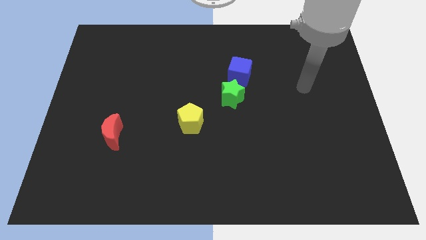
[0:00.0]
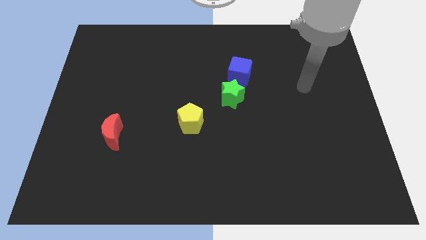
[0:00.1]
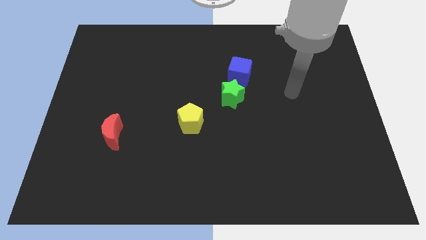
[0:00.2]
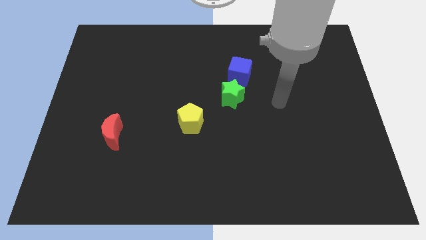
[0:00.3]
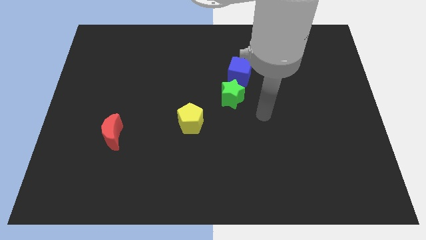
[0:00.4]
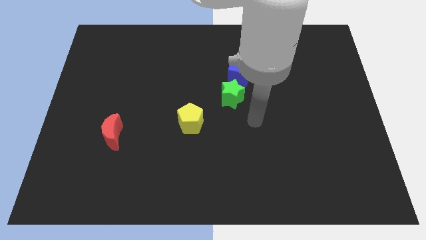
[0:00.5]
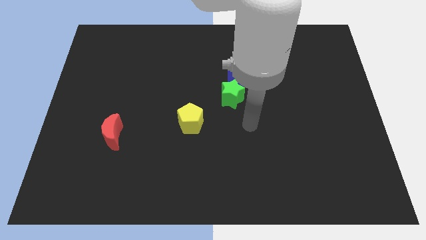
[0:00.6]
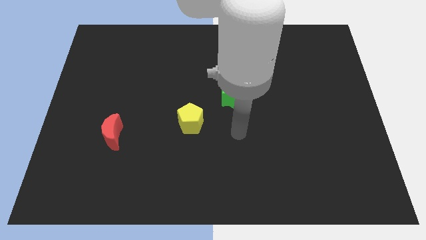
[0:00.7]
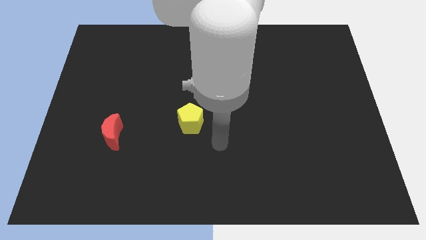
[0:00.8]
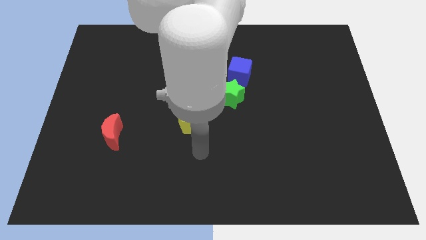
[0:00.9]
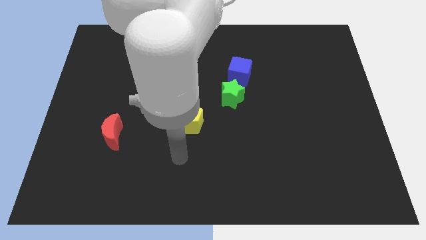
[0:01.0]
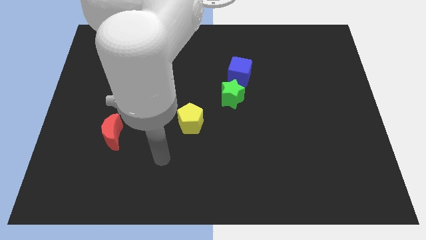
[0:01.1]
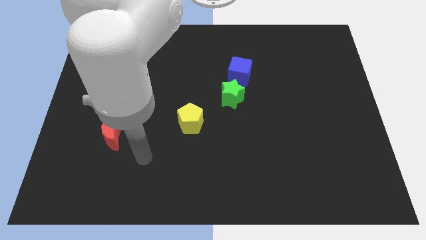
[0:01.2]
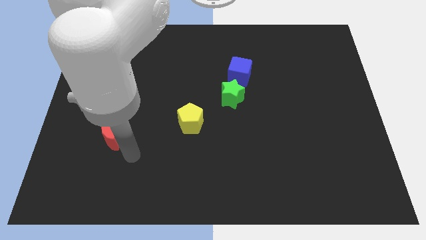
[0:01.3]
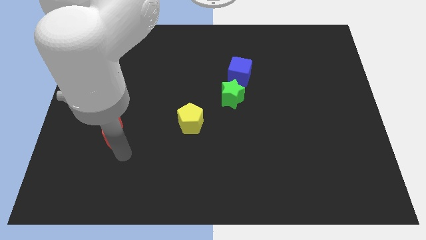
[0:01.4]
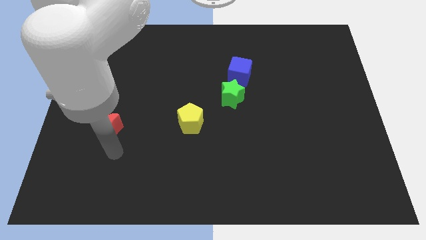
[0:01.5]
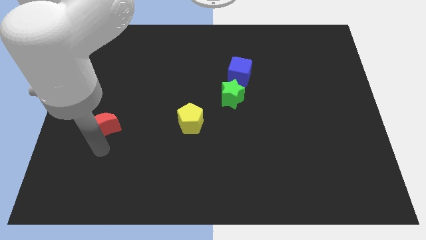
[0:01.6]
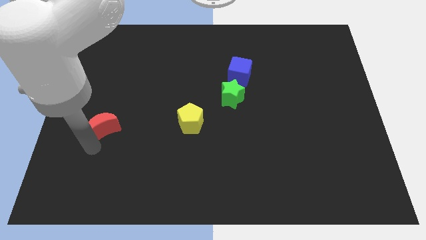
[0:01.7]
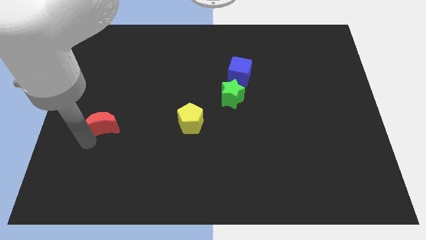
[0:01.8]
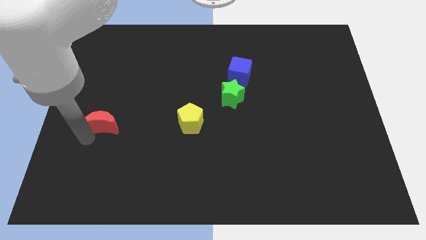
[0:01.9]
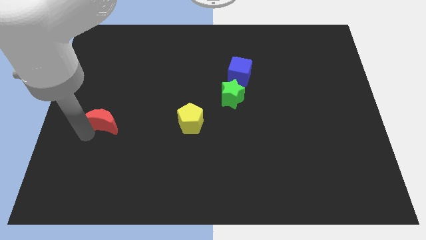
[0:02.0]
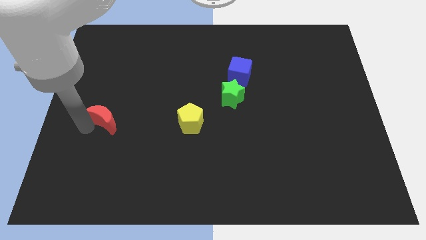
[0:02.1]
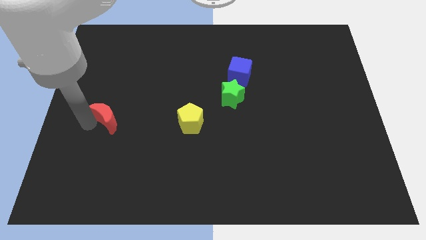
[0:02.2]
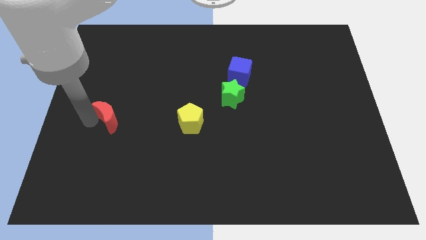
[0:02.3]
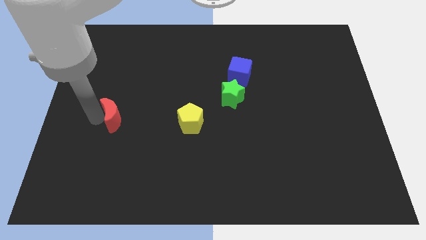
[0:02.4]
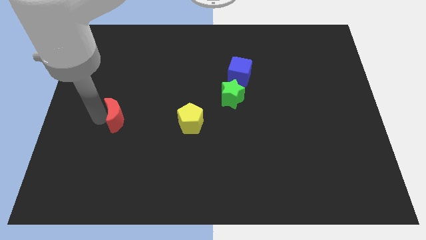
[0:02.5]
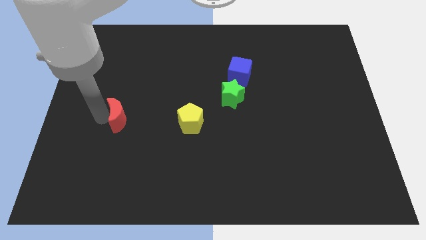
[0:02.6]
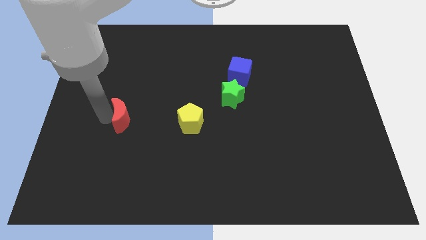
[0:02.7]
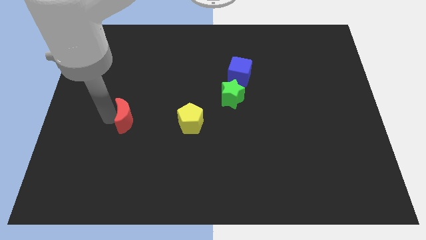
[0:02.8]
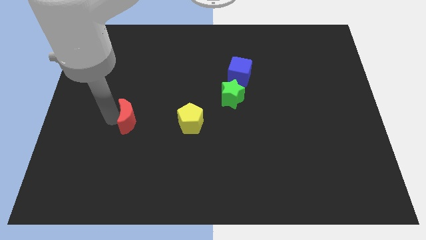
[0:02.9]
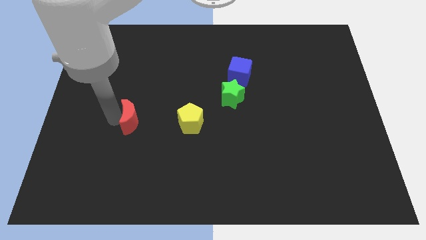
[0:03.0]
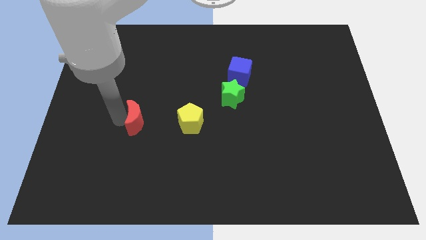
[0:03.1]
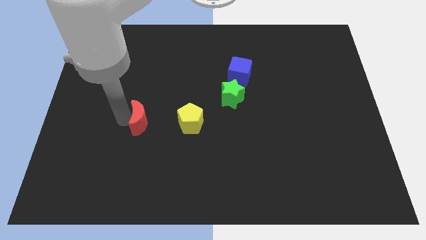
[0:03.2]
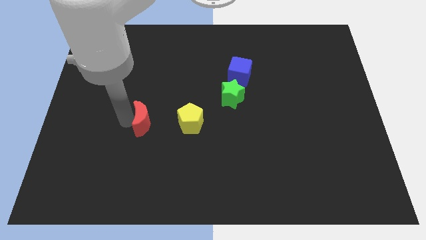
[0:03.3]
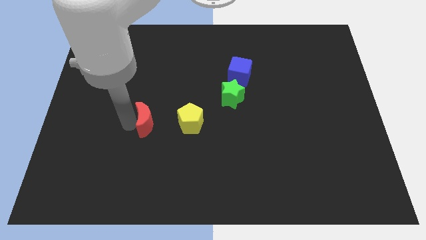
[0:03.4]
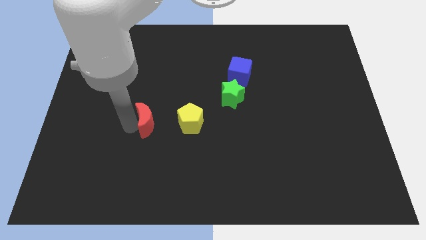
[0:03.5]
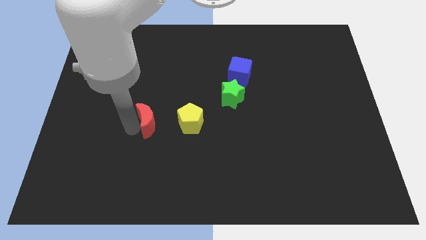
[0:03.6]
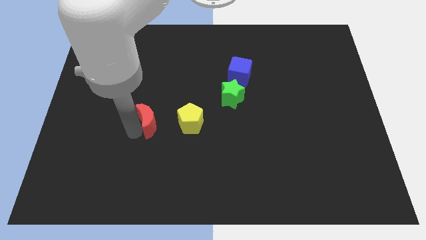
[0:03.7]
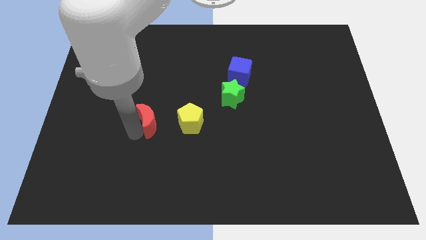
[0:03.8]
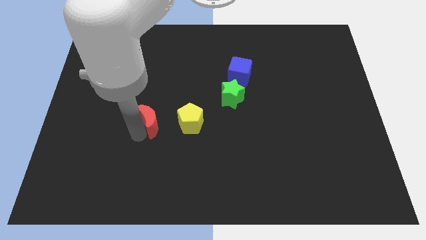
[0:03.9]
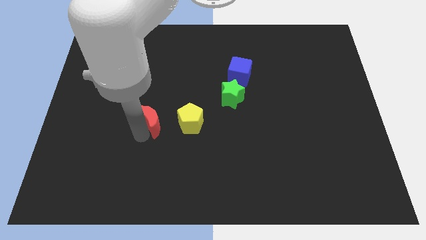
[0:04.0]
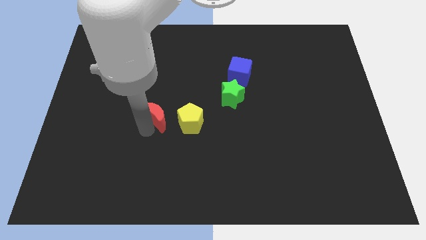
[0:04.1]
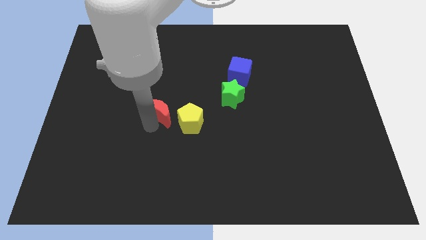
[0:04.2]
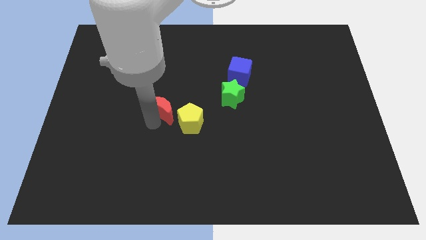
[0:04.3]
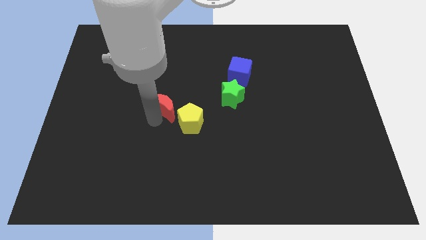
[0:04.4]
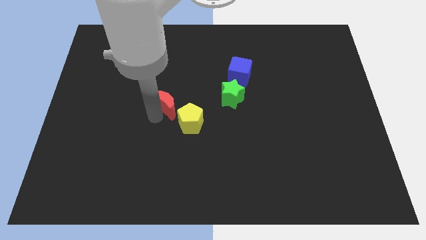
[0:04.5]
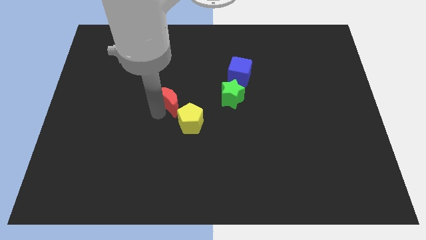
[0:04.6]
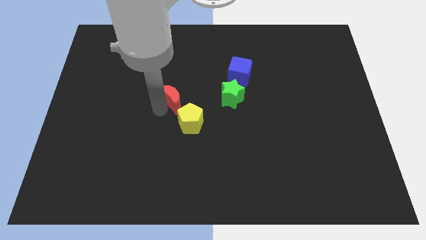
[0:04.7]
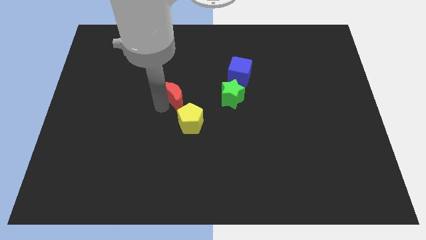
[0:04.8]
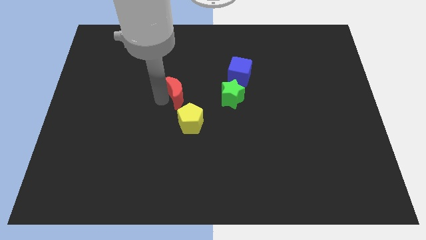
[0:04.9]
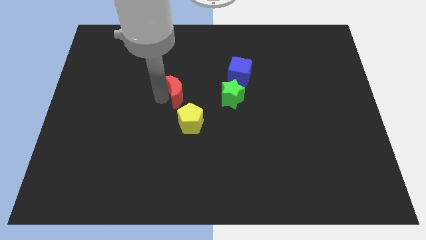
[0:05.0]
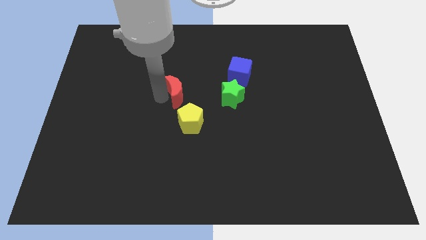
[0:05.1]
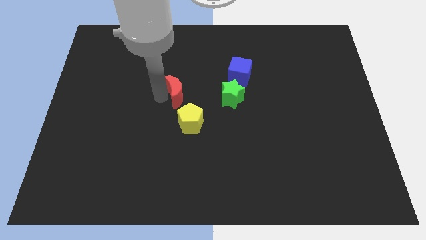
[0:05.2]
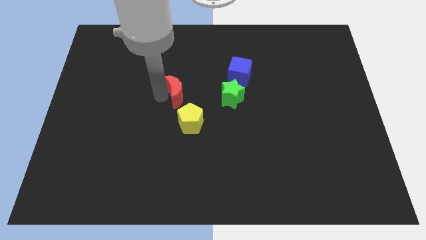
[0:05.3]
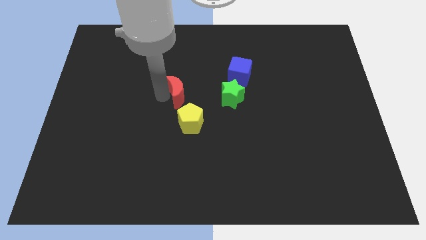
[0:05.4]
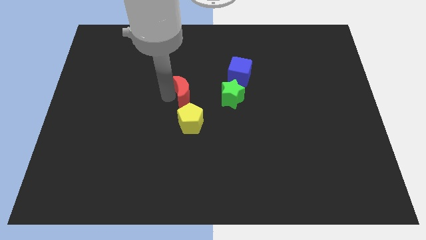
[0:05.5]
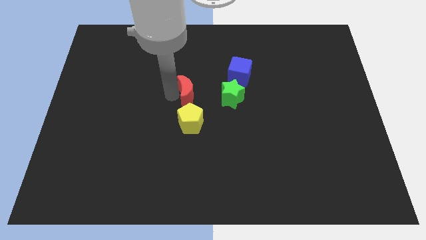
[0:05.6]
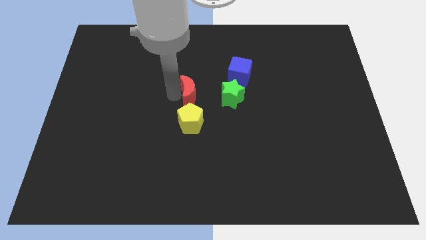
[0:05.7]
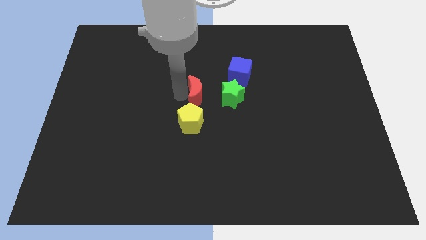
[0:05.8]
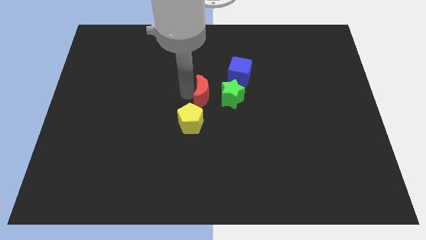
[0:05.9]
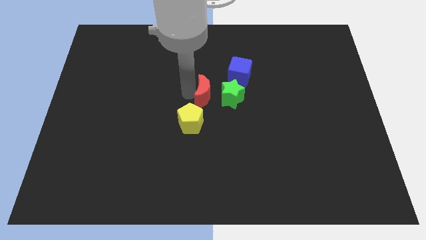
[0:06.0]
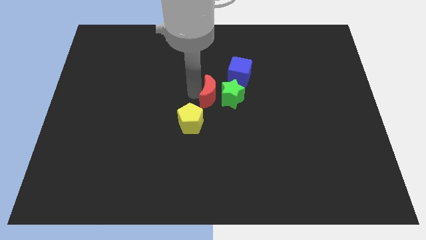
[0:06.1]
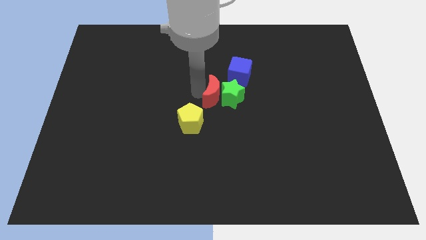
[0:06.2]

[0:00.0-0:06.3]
move the red block next to the star

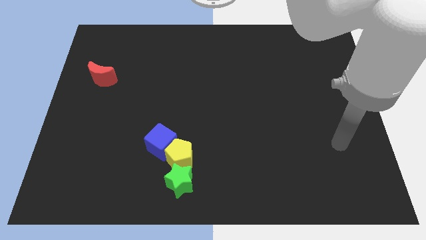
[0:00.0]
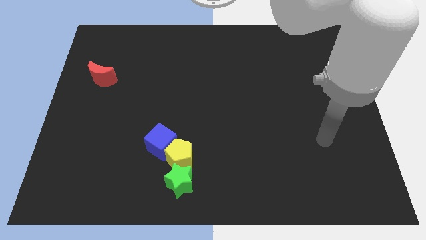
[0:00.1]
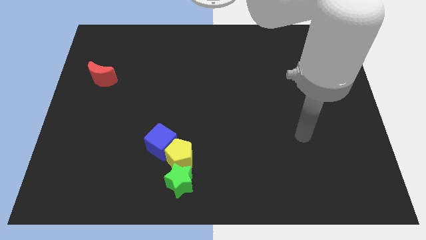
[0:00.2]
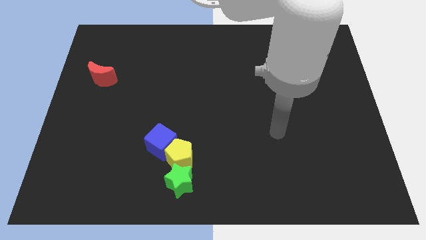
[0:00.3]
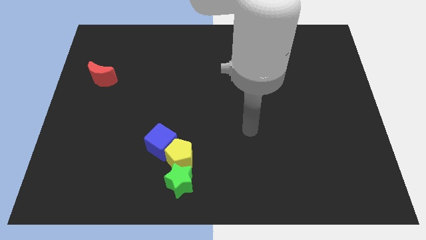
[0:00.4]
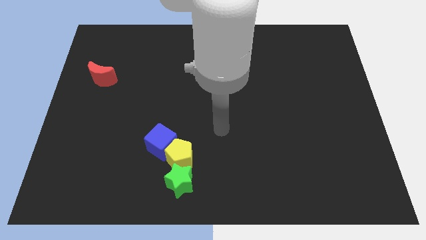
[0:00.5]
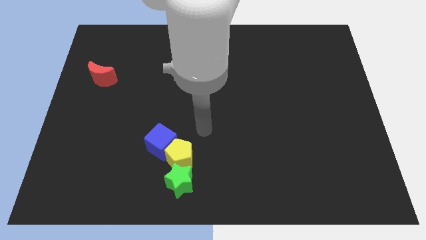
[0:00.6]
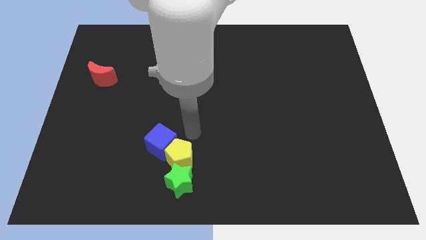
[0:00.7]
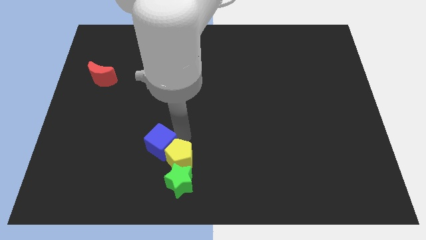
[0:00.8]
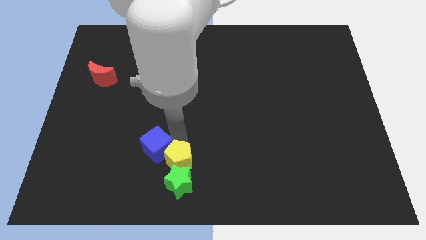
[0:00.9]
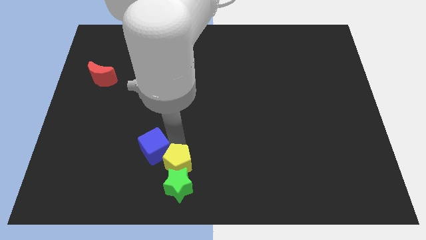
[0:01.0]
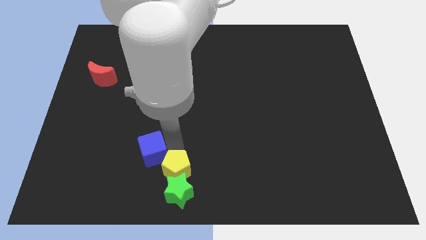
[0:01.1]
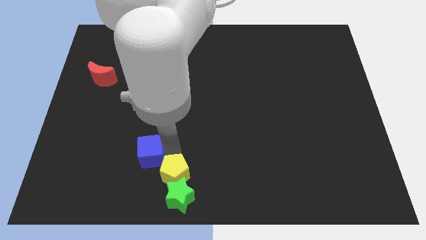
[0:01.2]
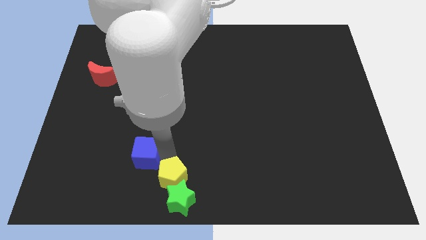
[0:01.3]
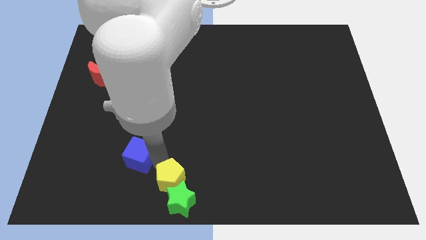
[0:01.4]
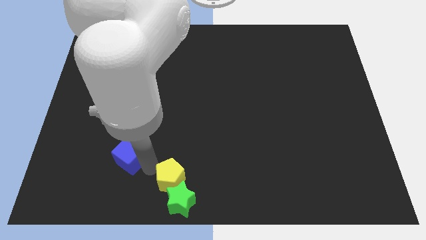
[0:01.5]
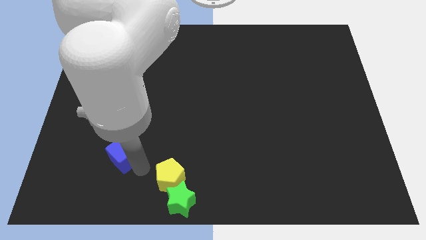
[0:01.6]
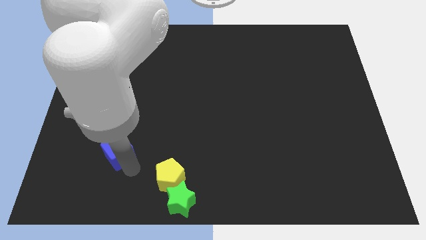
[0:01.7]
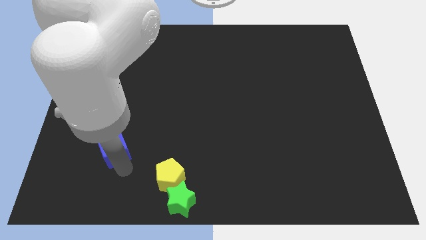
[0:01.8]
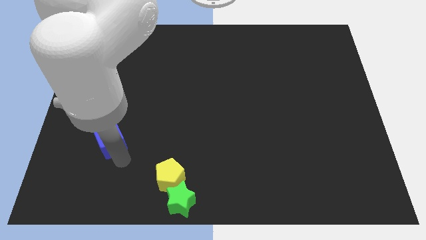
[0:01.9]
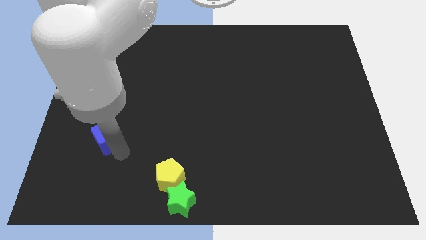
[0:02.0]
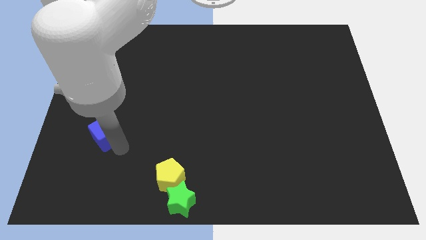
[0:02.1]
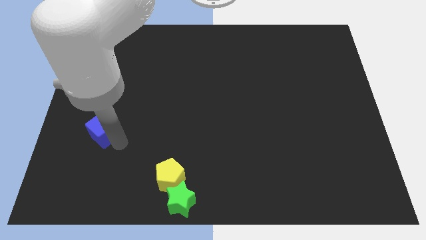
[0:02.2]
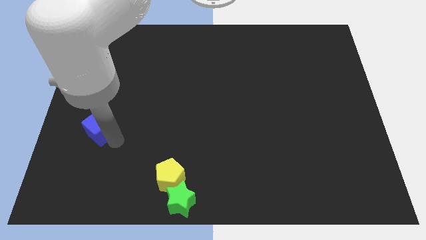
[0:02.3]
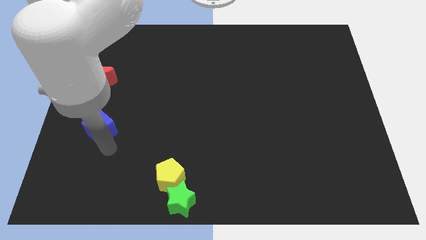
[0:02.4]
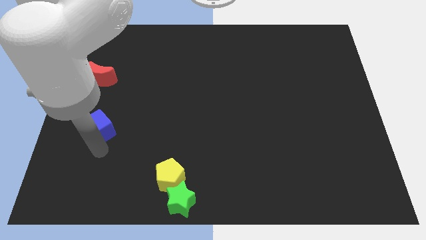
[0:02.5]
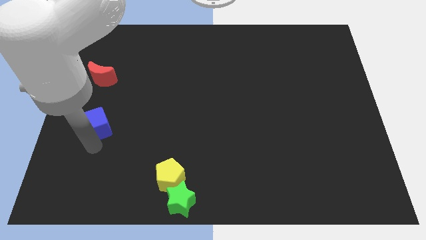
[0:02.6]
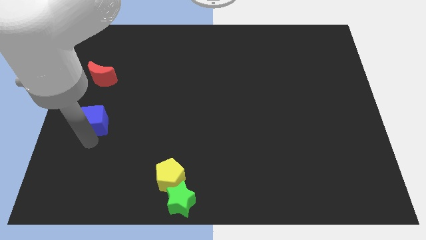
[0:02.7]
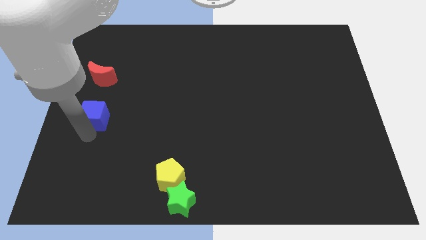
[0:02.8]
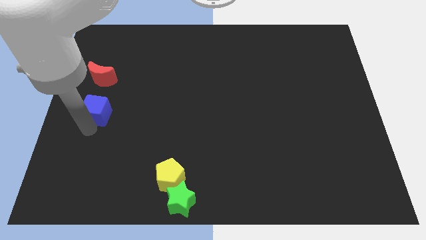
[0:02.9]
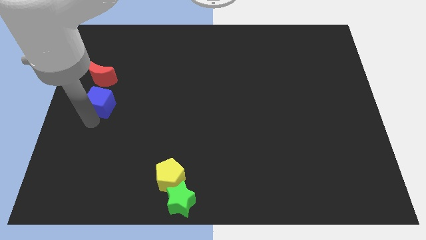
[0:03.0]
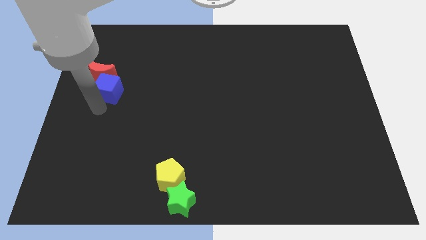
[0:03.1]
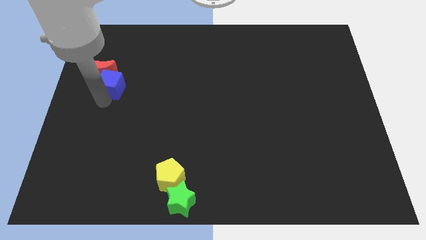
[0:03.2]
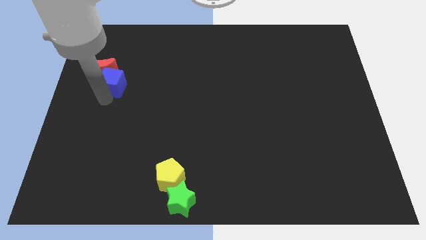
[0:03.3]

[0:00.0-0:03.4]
slide the blue cube towards the red moon
